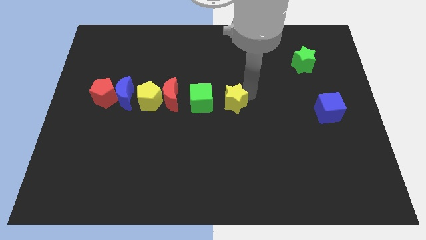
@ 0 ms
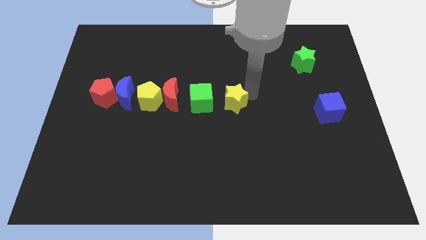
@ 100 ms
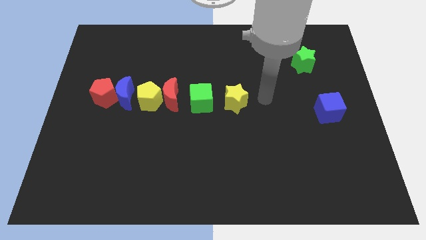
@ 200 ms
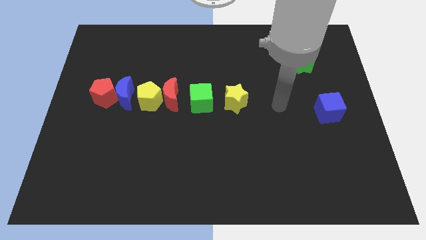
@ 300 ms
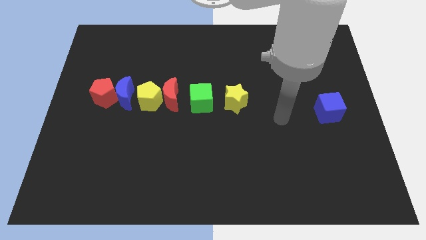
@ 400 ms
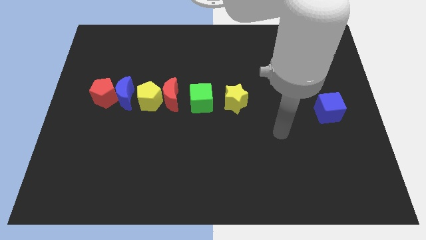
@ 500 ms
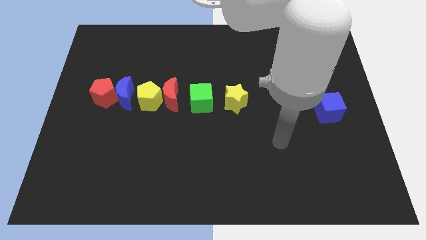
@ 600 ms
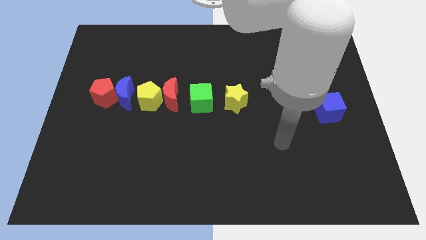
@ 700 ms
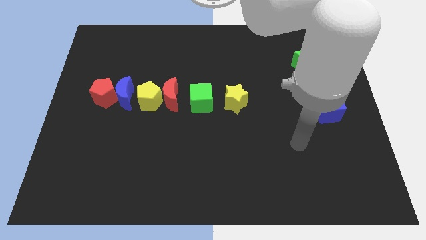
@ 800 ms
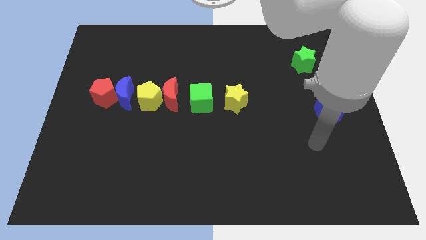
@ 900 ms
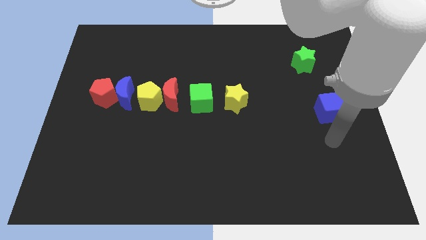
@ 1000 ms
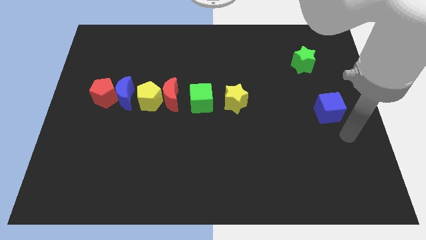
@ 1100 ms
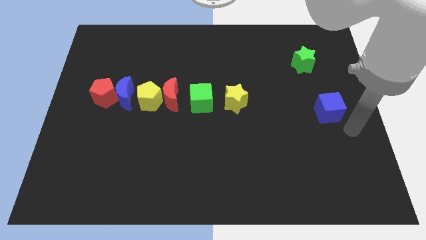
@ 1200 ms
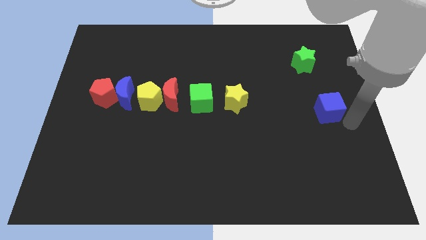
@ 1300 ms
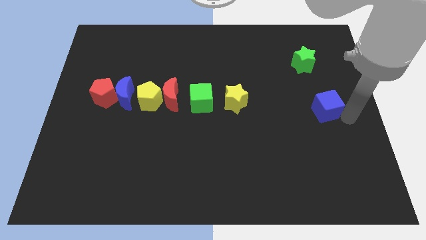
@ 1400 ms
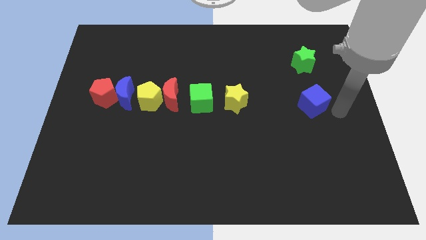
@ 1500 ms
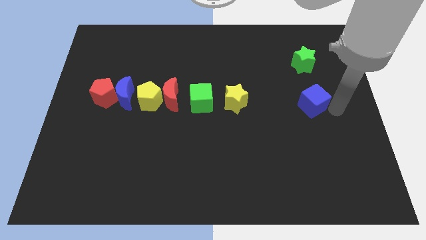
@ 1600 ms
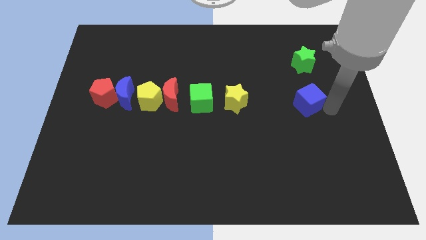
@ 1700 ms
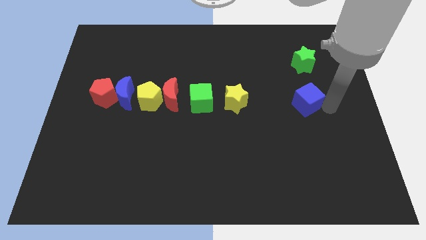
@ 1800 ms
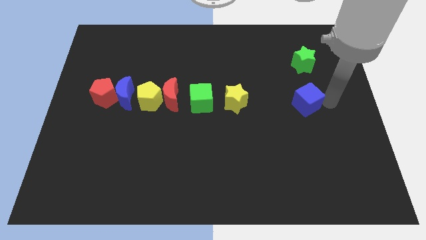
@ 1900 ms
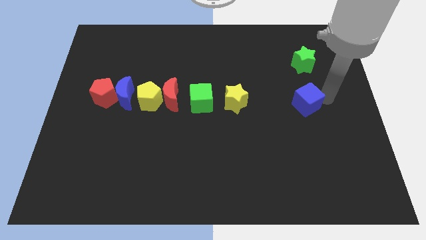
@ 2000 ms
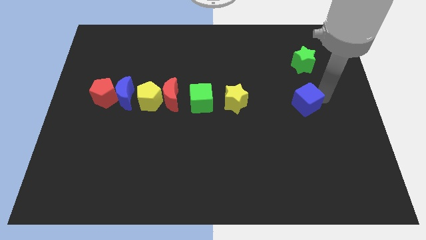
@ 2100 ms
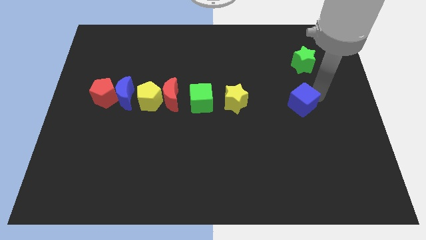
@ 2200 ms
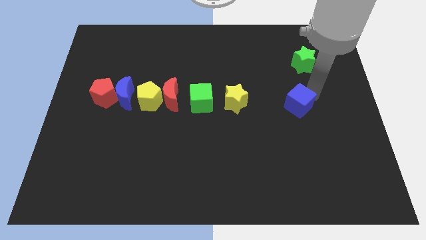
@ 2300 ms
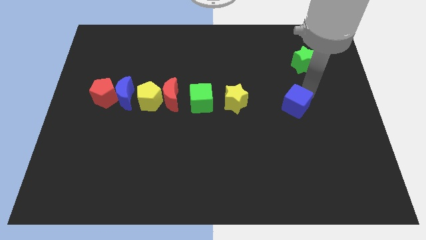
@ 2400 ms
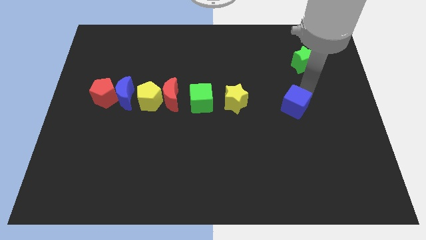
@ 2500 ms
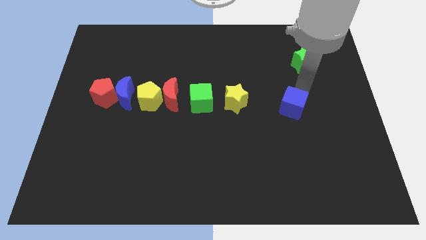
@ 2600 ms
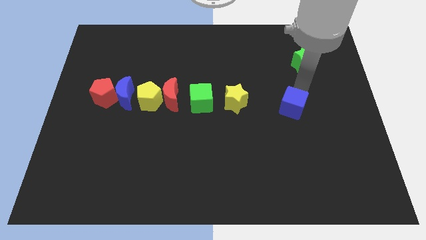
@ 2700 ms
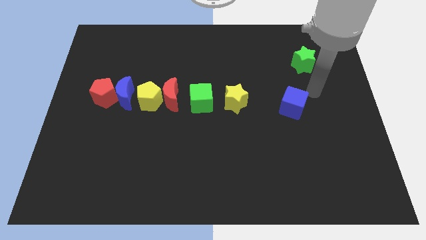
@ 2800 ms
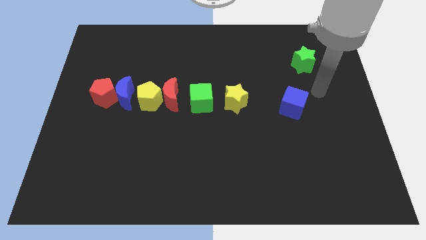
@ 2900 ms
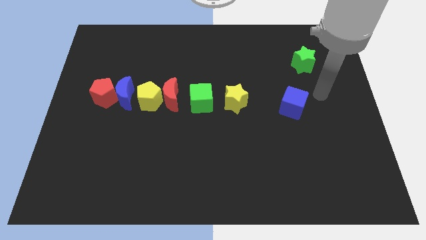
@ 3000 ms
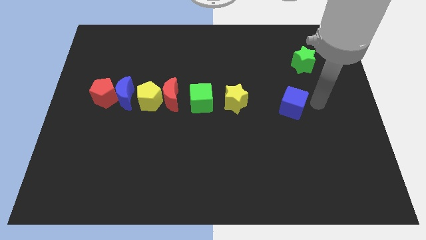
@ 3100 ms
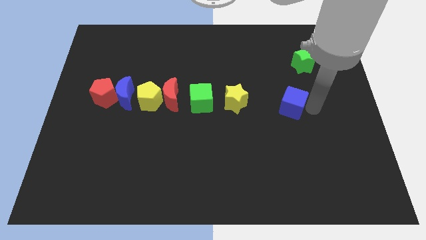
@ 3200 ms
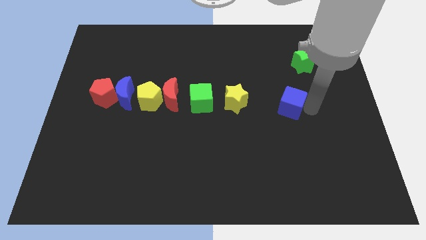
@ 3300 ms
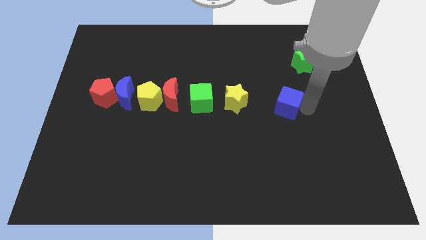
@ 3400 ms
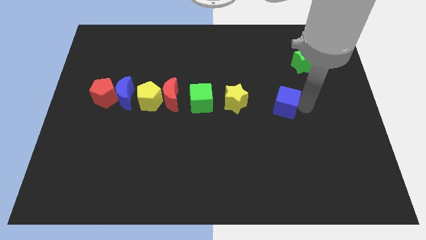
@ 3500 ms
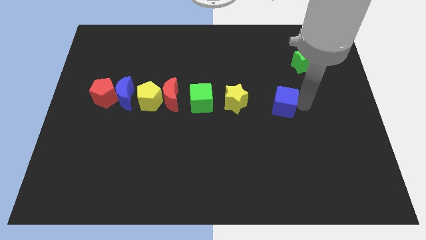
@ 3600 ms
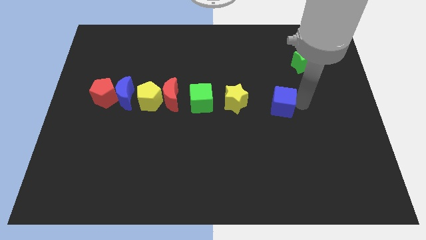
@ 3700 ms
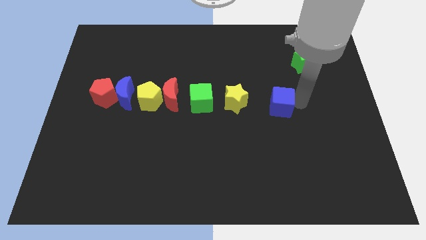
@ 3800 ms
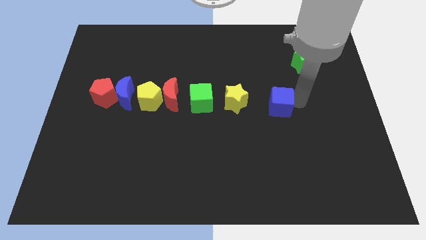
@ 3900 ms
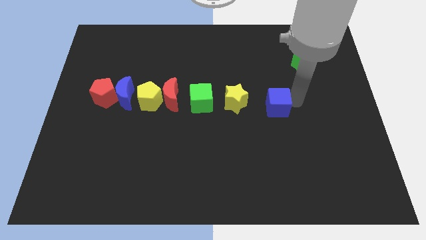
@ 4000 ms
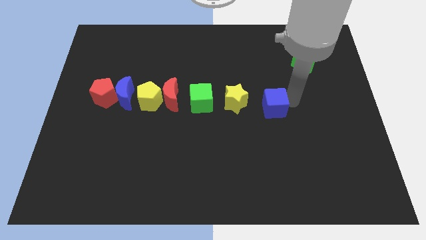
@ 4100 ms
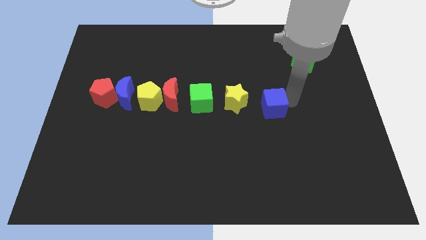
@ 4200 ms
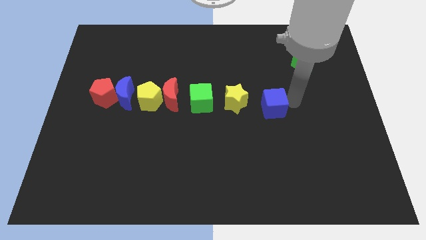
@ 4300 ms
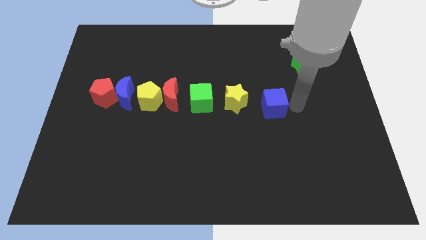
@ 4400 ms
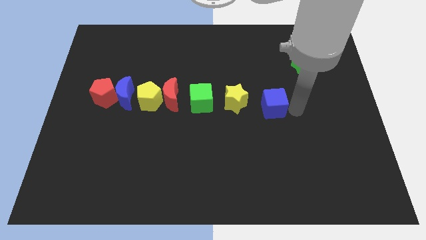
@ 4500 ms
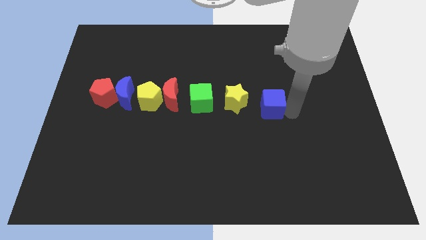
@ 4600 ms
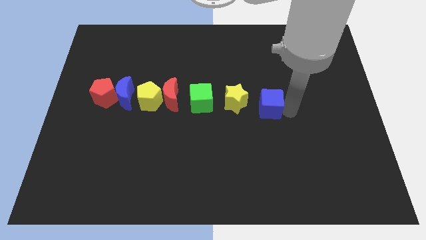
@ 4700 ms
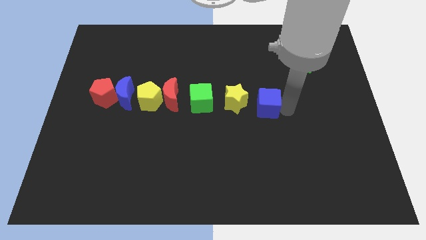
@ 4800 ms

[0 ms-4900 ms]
move the blue cube towards the center of the board

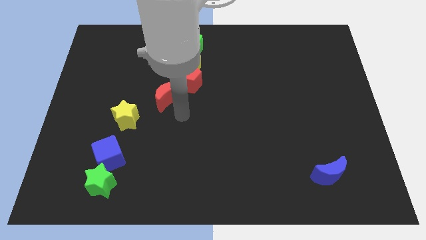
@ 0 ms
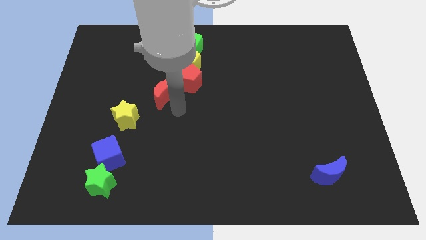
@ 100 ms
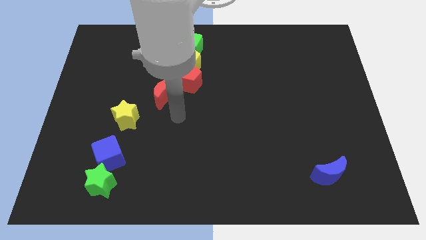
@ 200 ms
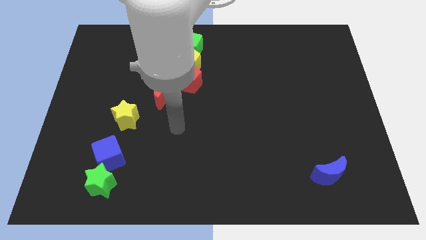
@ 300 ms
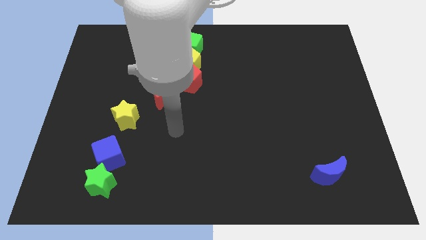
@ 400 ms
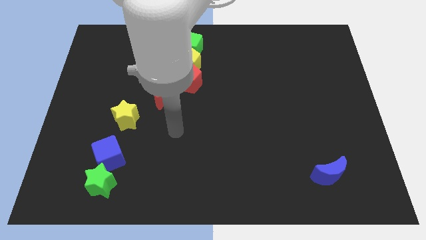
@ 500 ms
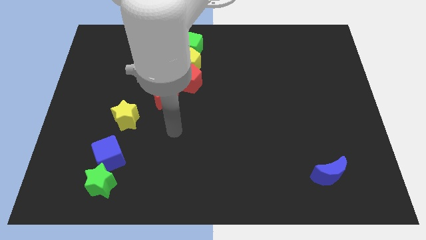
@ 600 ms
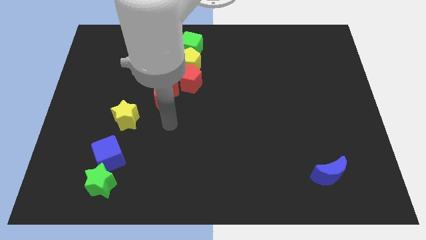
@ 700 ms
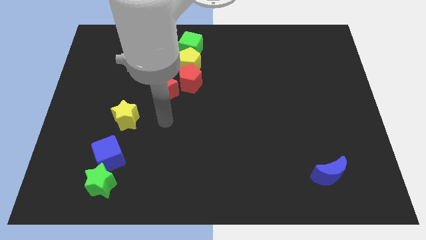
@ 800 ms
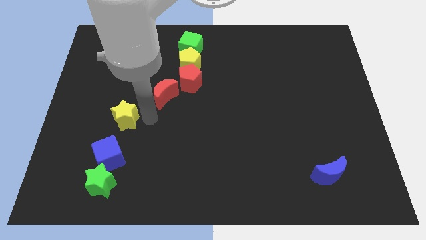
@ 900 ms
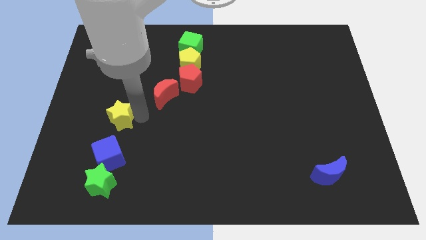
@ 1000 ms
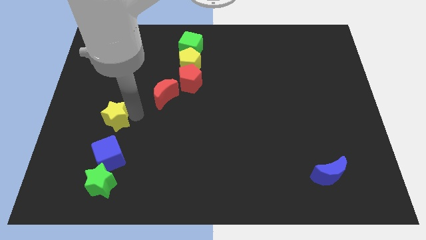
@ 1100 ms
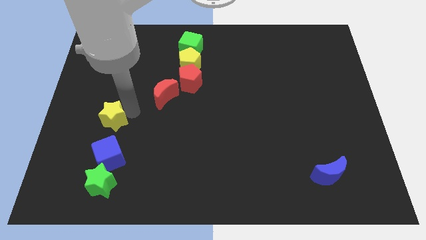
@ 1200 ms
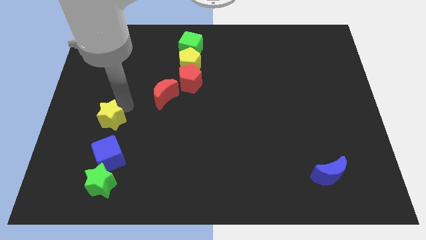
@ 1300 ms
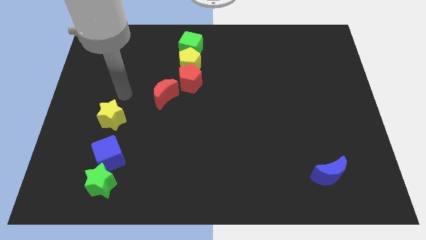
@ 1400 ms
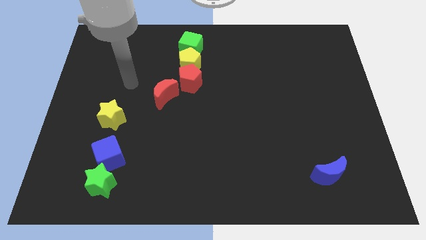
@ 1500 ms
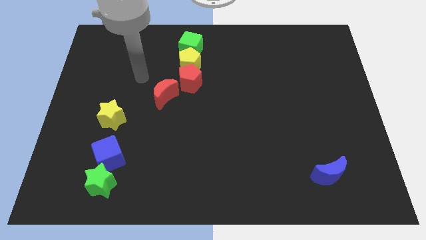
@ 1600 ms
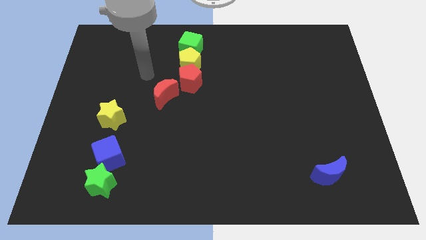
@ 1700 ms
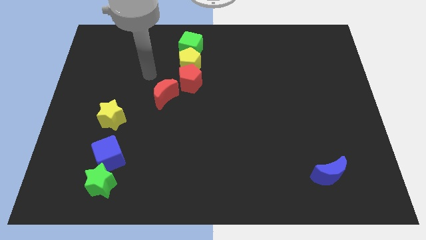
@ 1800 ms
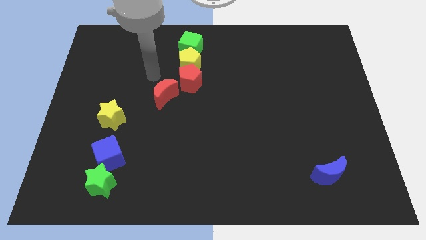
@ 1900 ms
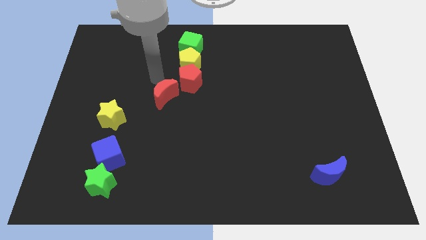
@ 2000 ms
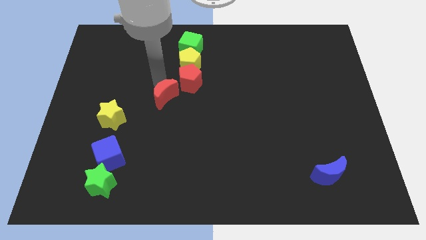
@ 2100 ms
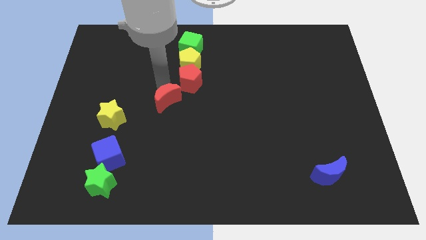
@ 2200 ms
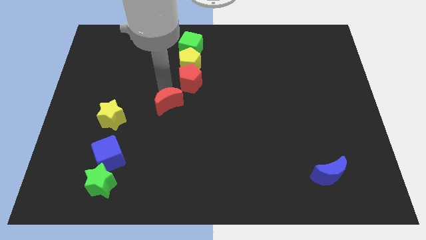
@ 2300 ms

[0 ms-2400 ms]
slightly touch right to the yellow star

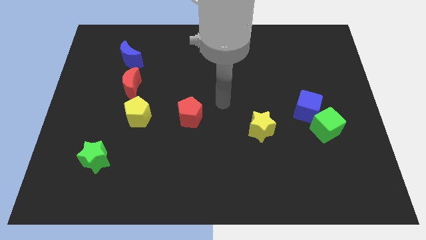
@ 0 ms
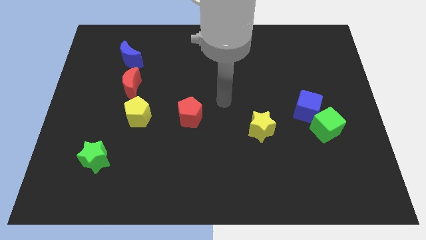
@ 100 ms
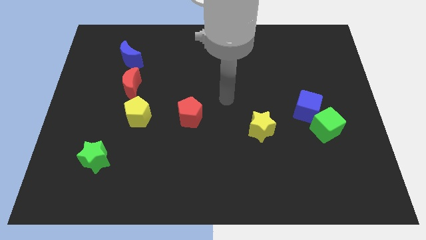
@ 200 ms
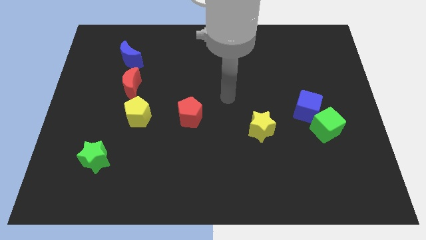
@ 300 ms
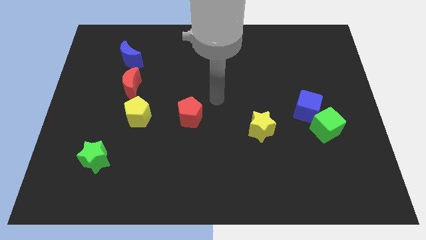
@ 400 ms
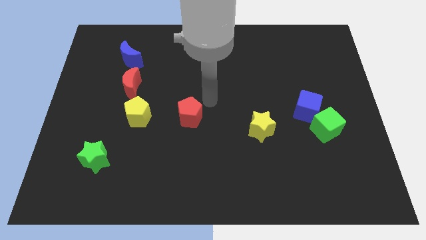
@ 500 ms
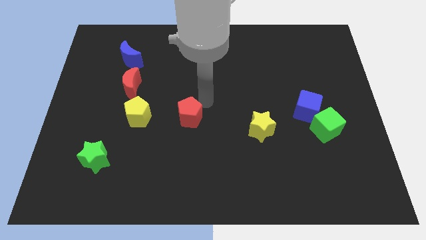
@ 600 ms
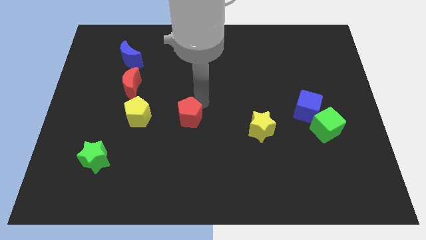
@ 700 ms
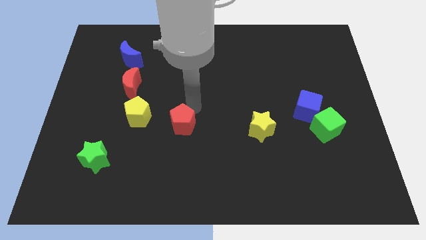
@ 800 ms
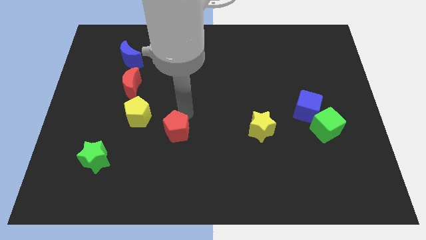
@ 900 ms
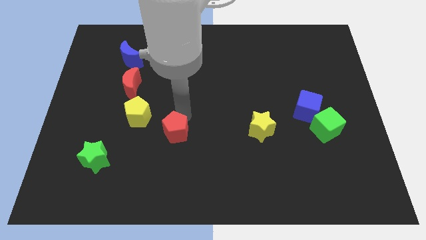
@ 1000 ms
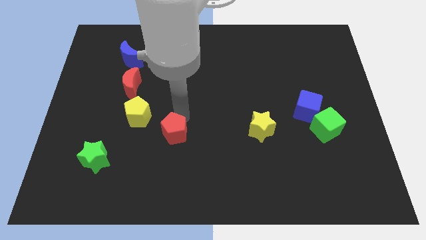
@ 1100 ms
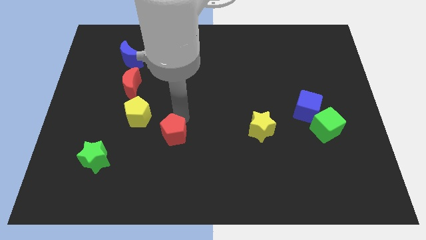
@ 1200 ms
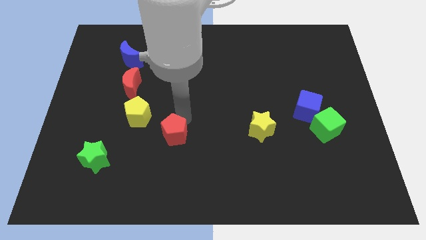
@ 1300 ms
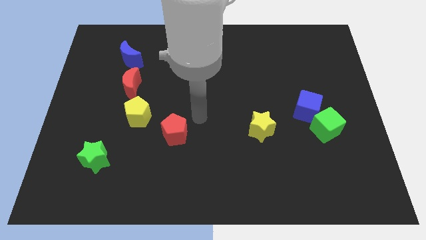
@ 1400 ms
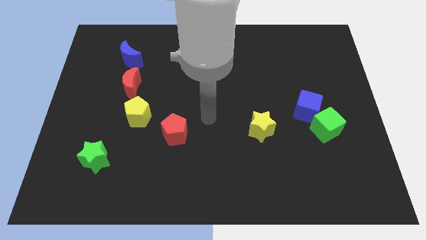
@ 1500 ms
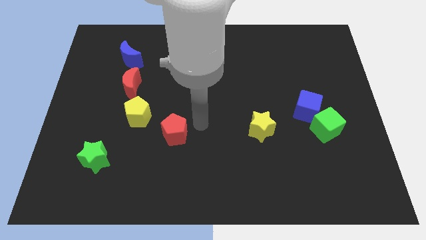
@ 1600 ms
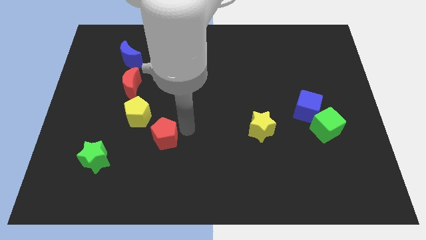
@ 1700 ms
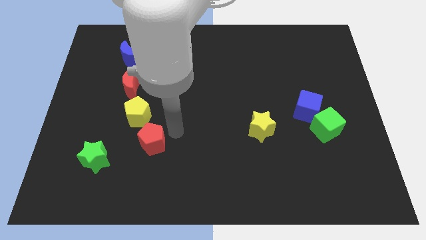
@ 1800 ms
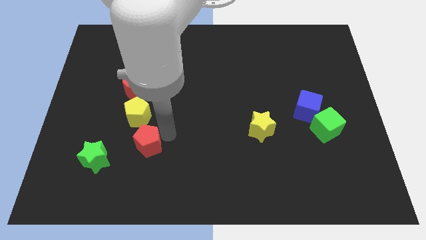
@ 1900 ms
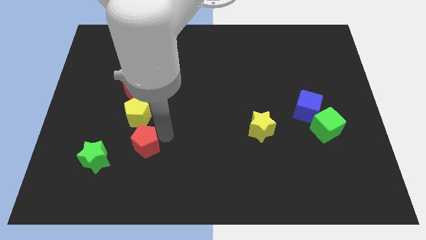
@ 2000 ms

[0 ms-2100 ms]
push red pentagon to the bottom right of yellow pentagon
